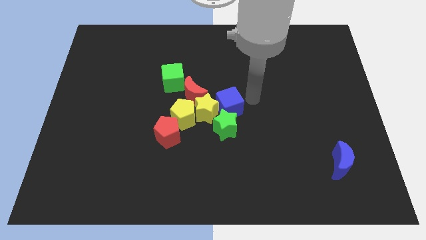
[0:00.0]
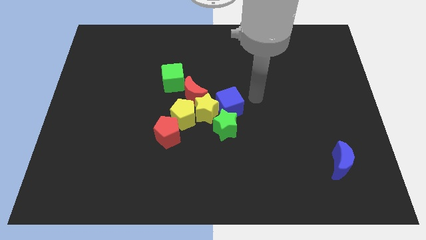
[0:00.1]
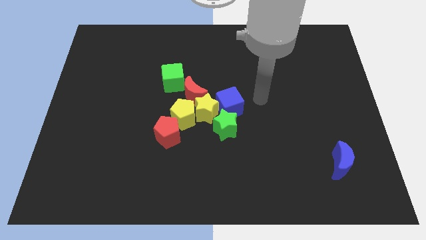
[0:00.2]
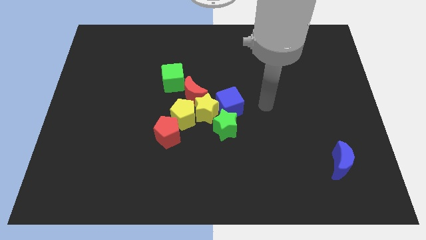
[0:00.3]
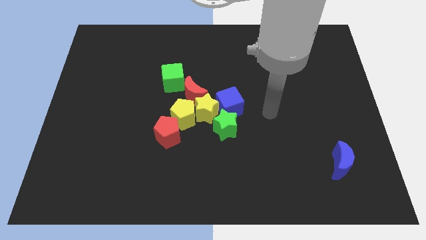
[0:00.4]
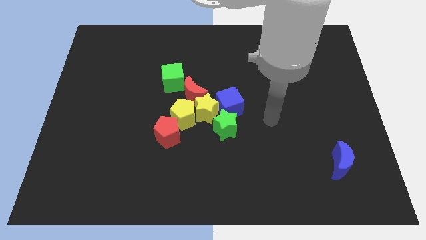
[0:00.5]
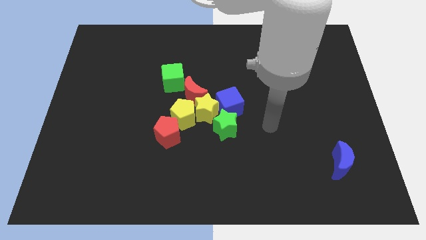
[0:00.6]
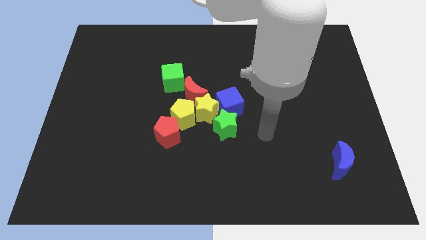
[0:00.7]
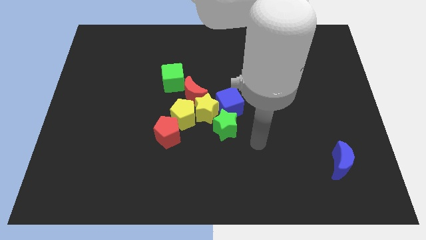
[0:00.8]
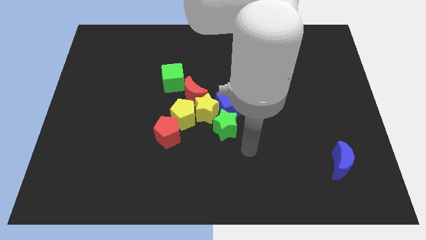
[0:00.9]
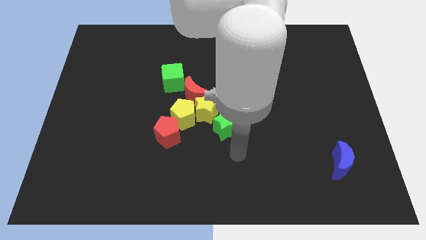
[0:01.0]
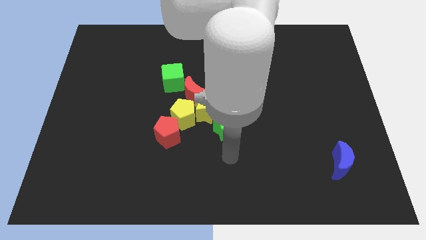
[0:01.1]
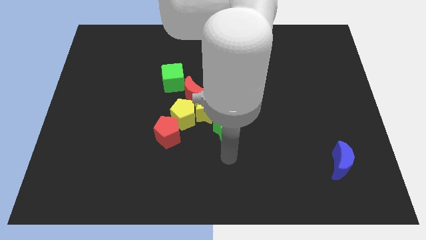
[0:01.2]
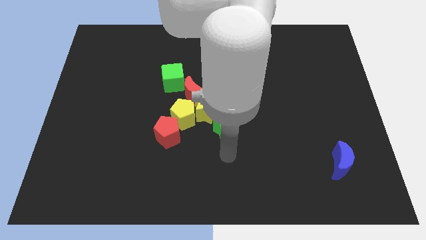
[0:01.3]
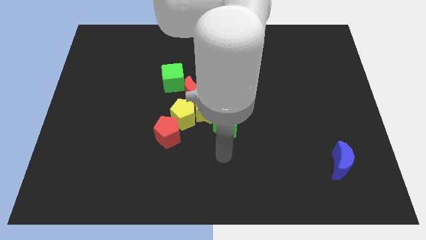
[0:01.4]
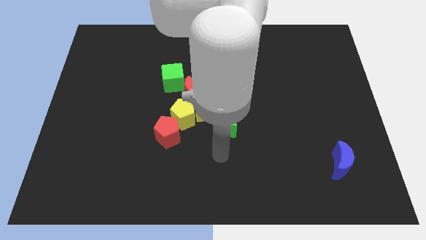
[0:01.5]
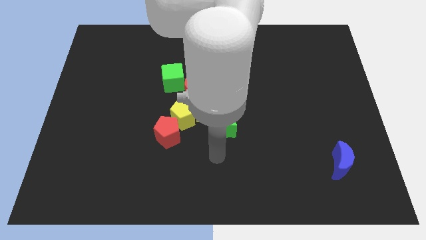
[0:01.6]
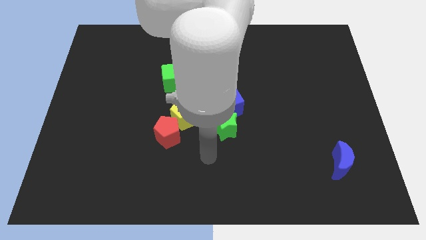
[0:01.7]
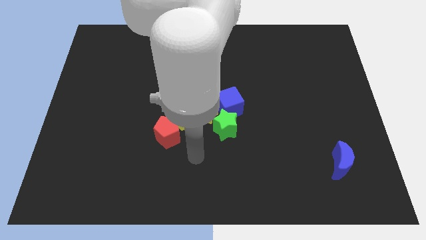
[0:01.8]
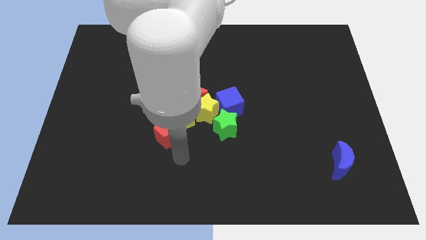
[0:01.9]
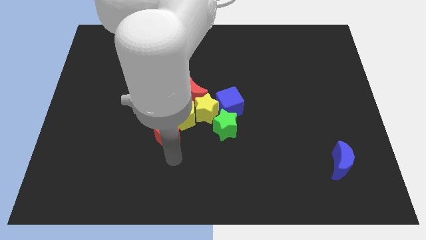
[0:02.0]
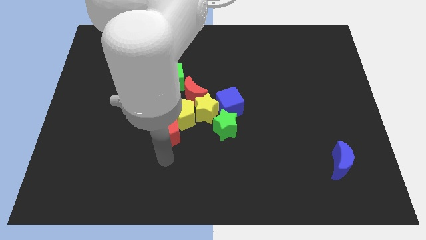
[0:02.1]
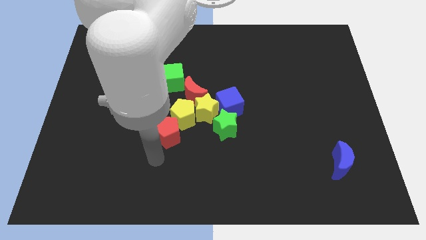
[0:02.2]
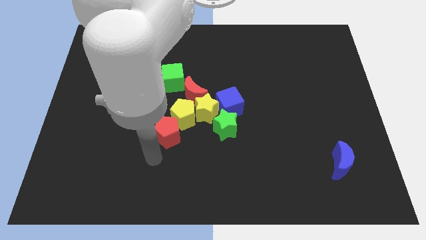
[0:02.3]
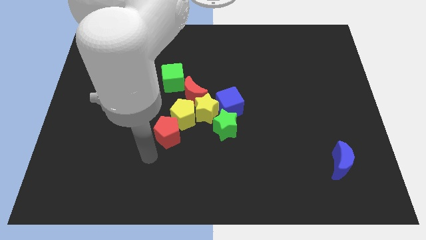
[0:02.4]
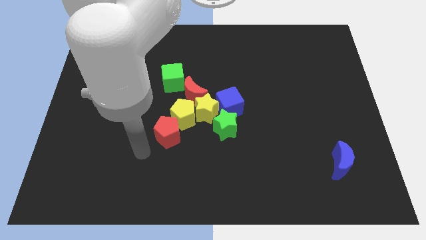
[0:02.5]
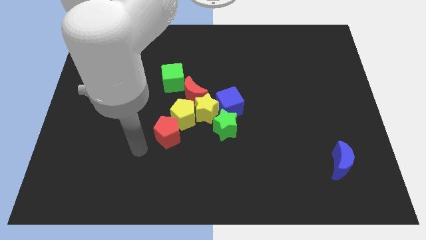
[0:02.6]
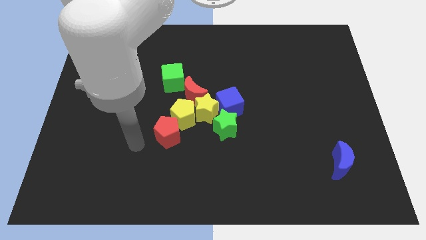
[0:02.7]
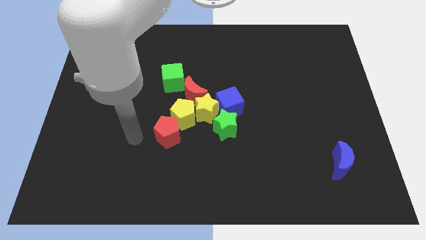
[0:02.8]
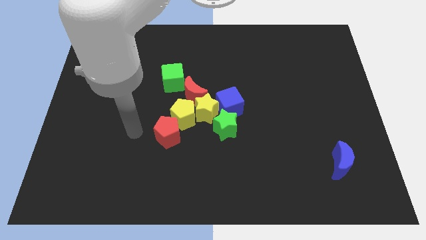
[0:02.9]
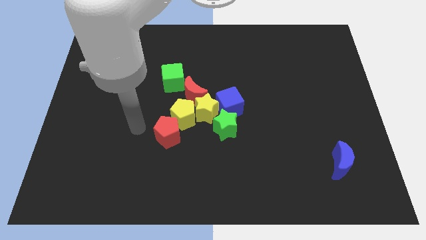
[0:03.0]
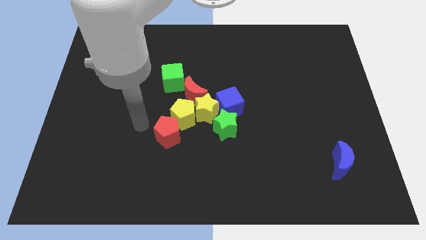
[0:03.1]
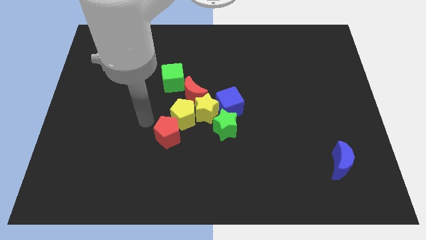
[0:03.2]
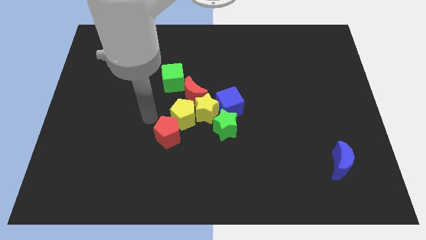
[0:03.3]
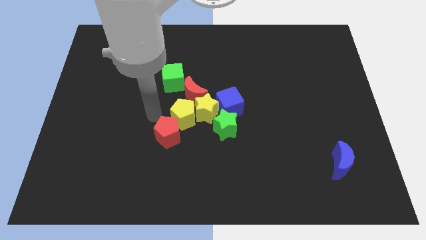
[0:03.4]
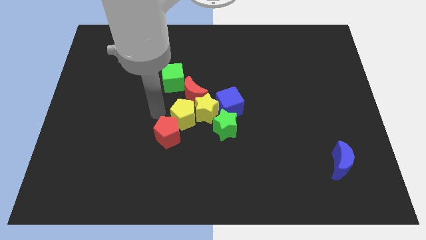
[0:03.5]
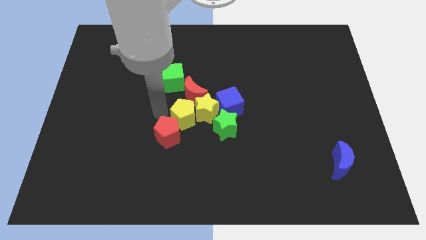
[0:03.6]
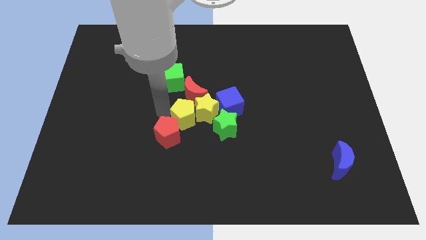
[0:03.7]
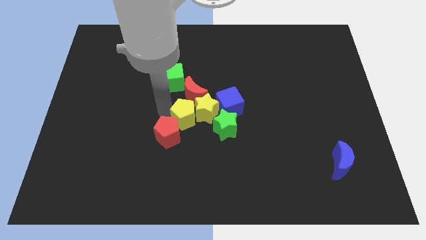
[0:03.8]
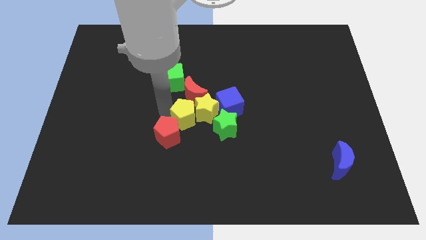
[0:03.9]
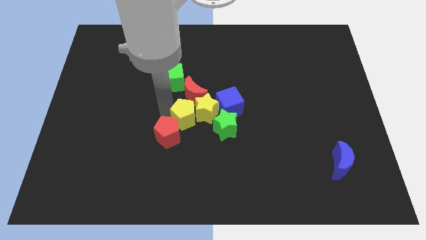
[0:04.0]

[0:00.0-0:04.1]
move the arm away from the blue cube

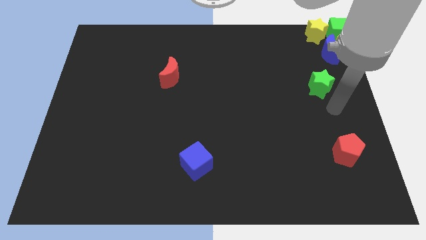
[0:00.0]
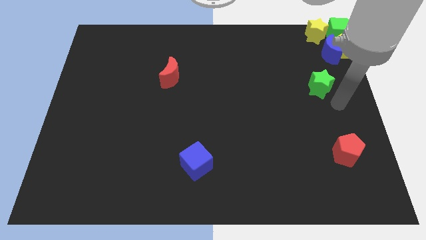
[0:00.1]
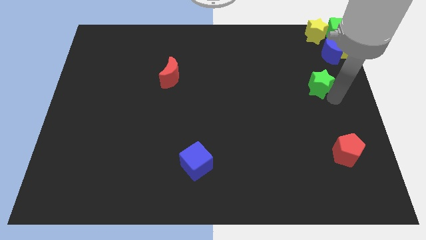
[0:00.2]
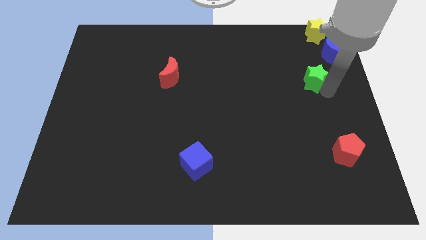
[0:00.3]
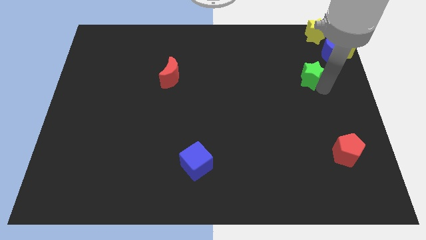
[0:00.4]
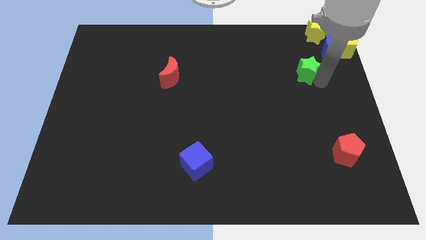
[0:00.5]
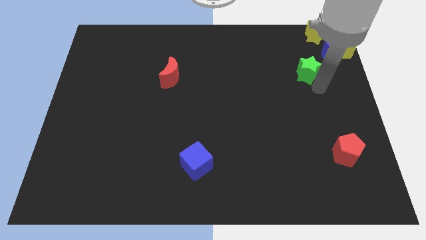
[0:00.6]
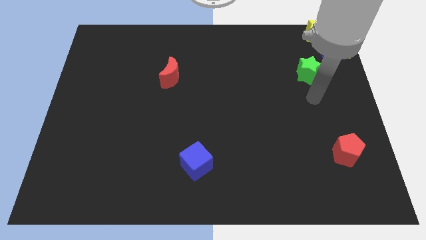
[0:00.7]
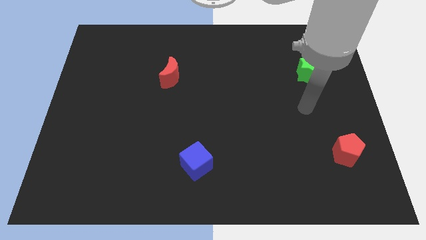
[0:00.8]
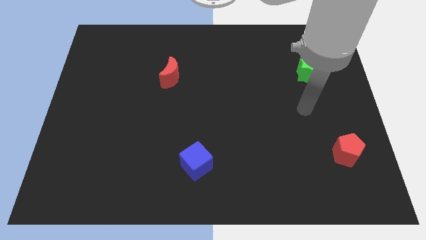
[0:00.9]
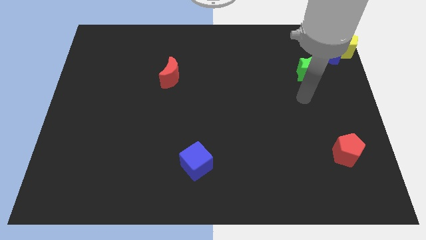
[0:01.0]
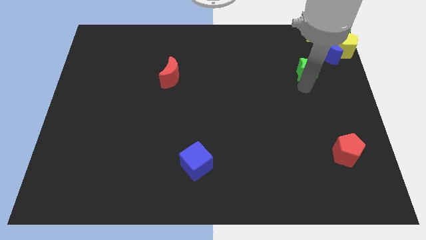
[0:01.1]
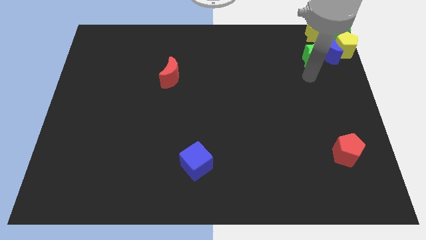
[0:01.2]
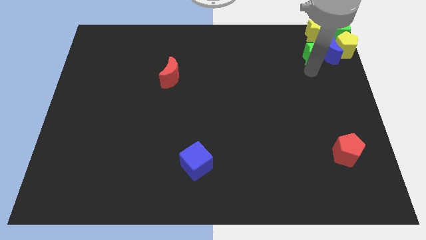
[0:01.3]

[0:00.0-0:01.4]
push the green star into the group of blocks

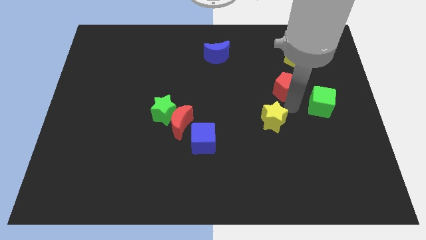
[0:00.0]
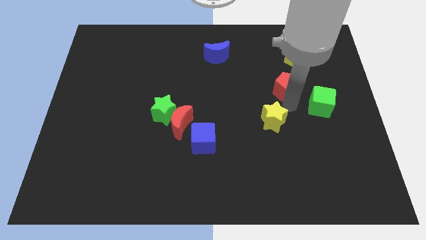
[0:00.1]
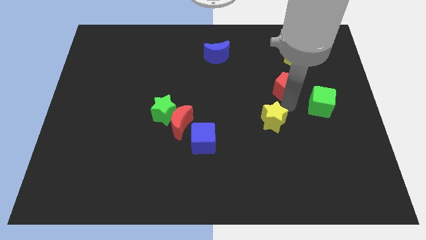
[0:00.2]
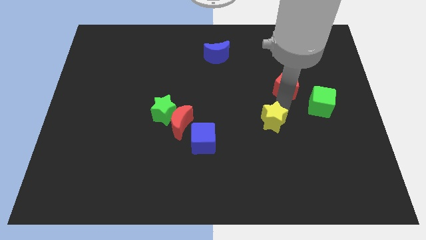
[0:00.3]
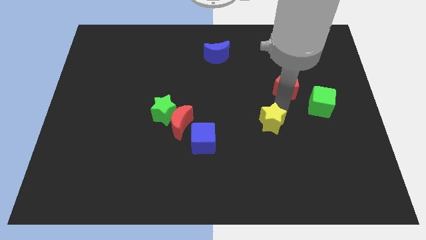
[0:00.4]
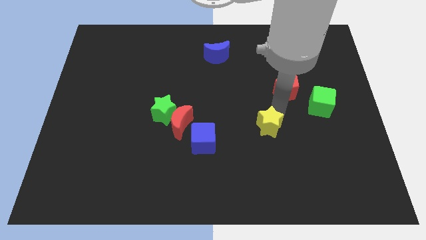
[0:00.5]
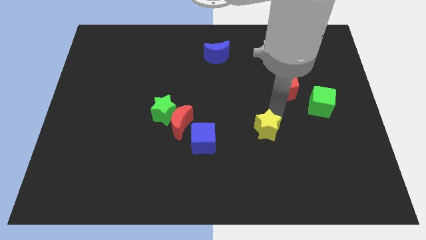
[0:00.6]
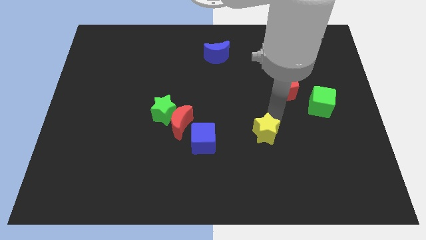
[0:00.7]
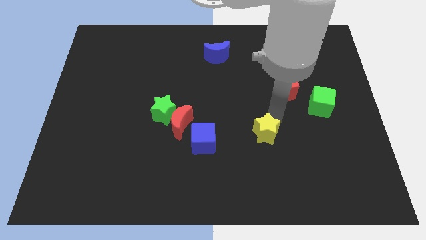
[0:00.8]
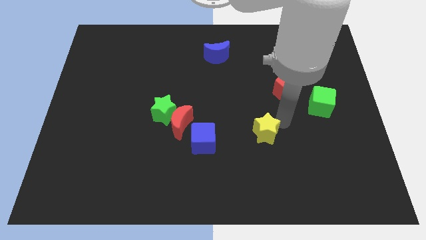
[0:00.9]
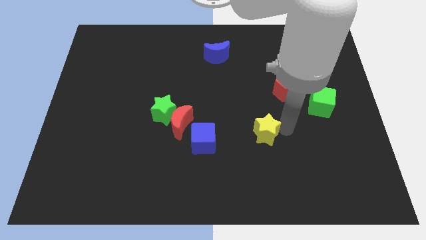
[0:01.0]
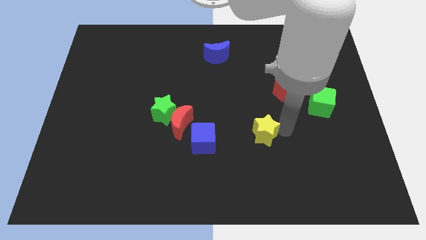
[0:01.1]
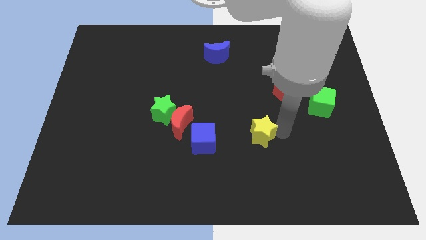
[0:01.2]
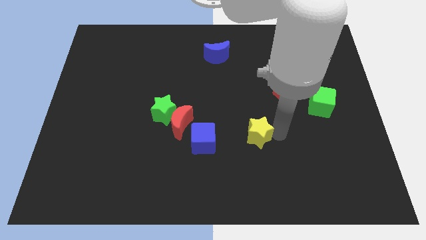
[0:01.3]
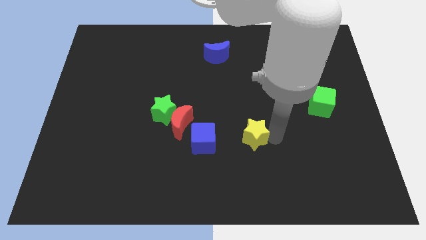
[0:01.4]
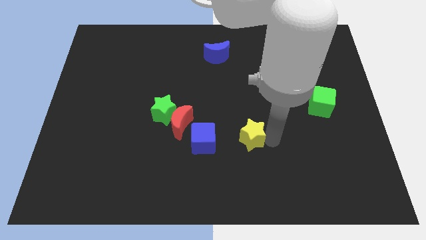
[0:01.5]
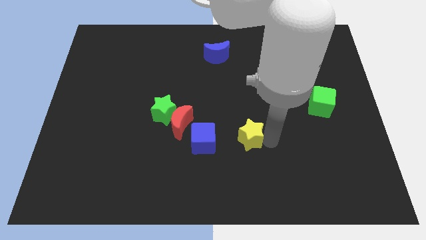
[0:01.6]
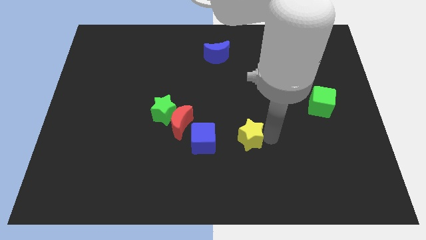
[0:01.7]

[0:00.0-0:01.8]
push yellow star to the right of blue cube

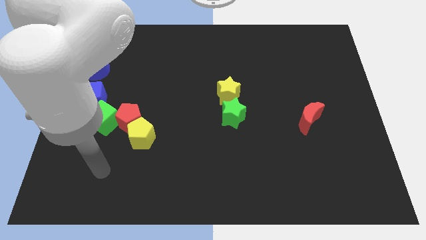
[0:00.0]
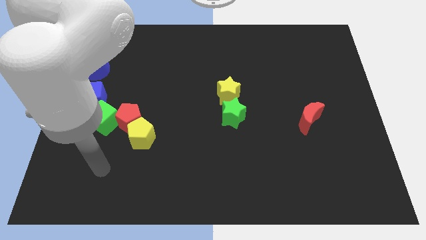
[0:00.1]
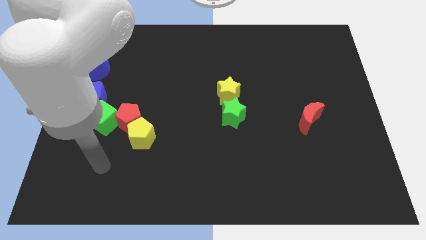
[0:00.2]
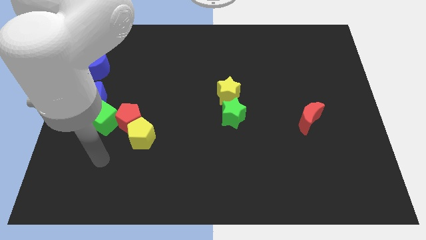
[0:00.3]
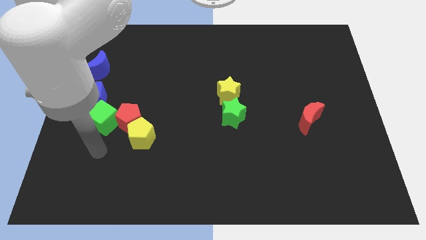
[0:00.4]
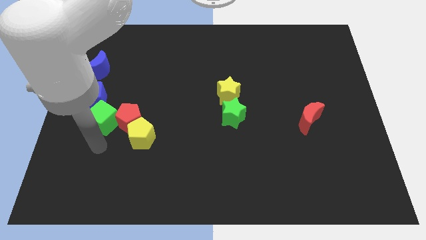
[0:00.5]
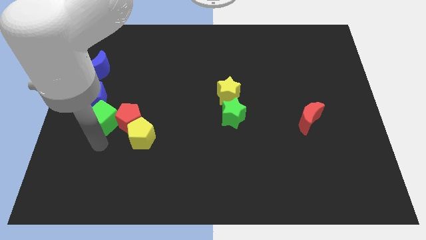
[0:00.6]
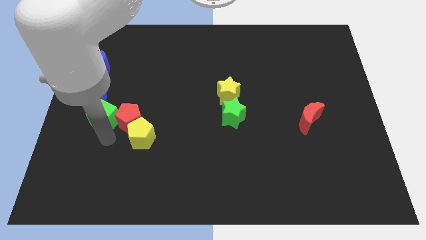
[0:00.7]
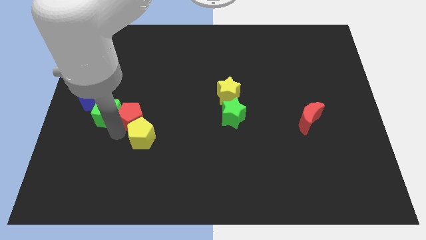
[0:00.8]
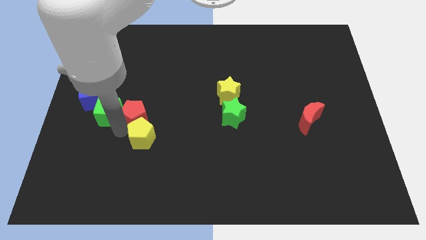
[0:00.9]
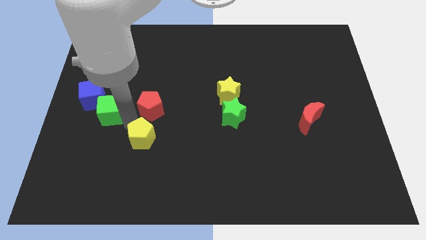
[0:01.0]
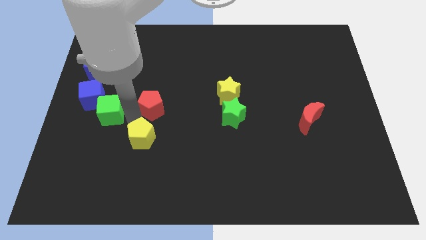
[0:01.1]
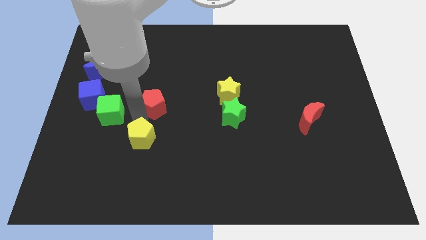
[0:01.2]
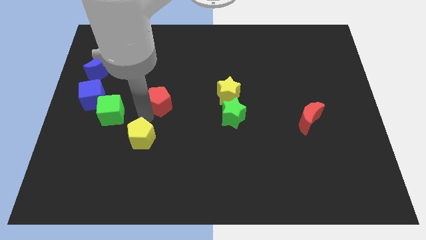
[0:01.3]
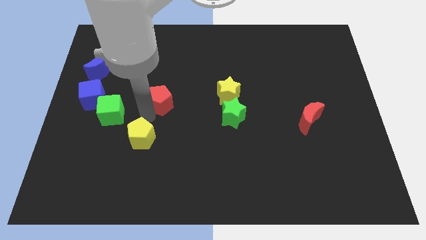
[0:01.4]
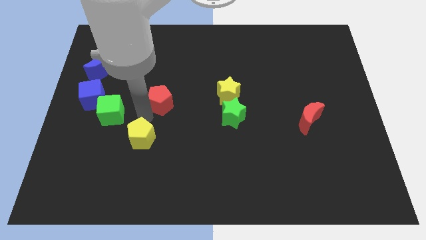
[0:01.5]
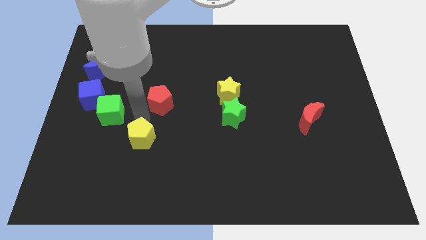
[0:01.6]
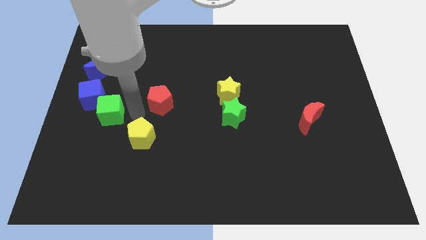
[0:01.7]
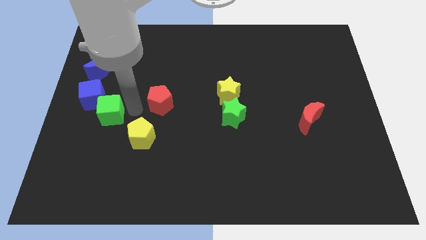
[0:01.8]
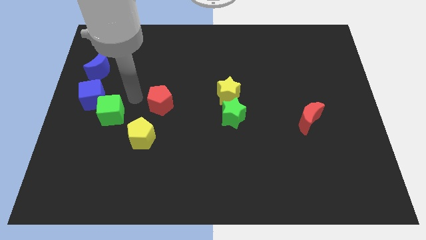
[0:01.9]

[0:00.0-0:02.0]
separate the red penatgon from the green cube and the yellow pentagon
